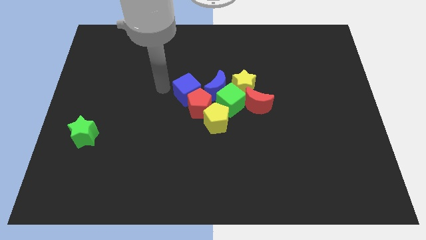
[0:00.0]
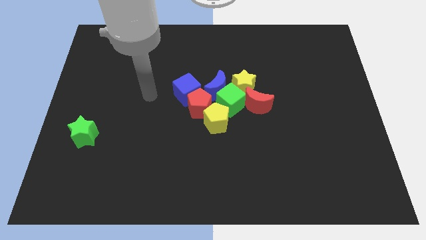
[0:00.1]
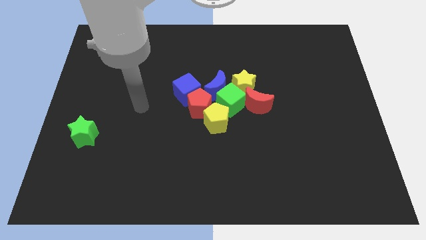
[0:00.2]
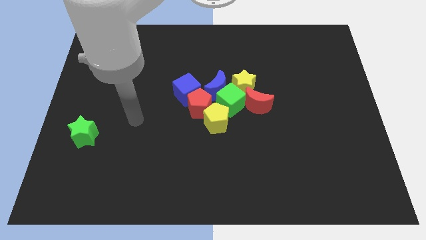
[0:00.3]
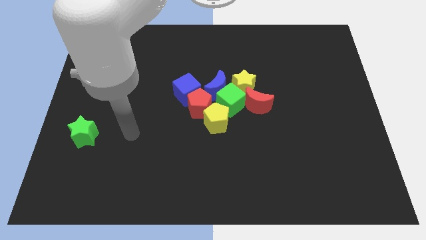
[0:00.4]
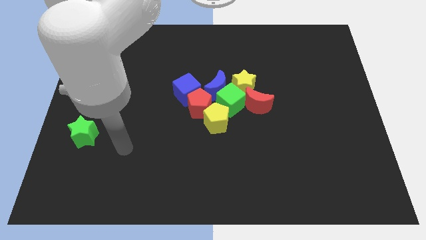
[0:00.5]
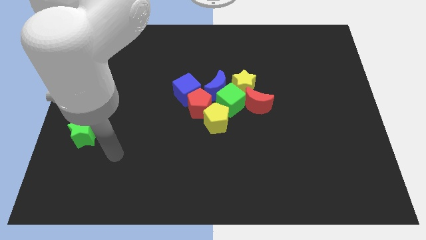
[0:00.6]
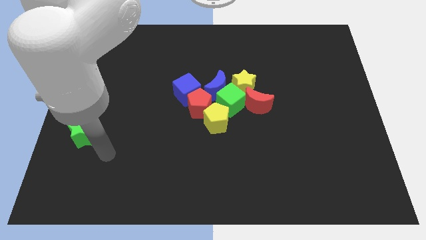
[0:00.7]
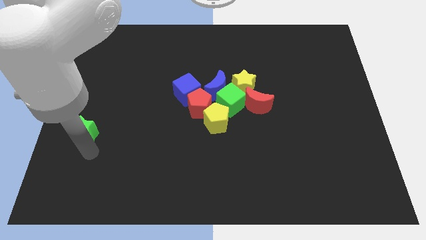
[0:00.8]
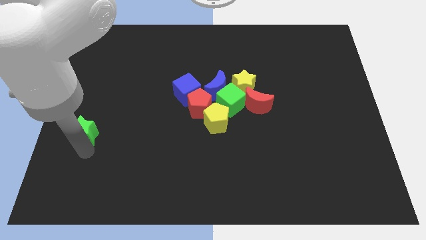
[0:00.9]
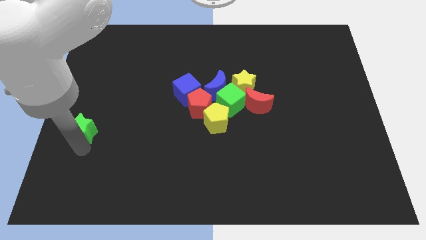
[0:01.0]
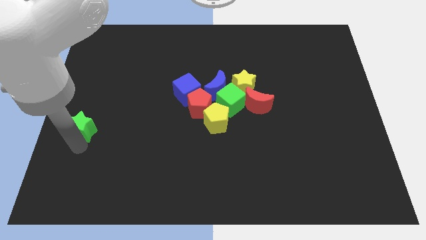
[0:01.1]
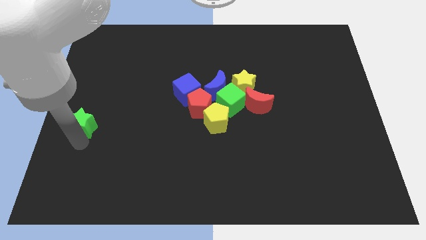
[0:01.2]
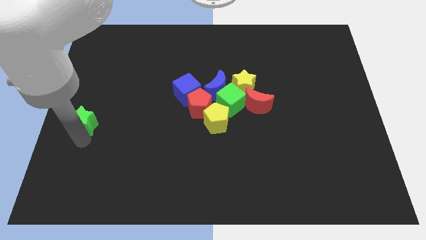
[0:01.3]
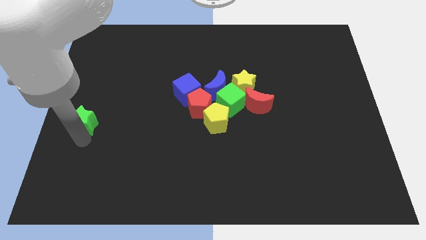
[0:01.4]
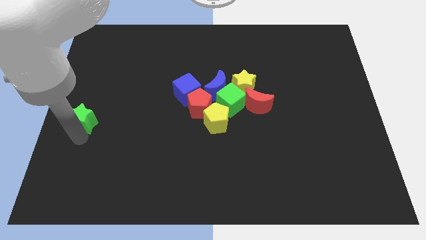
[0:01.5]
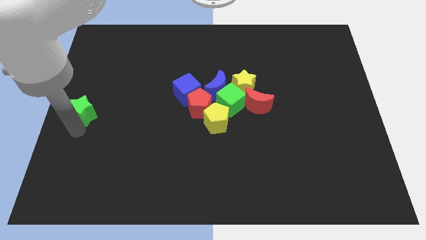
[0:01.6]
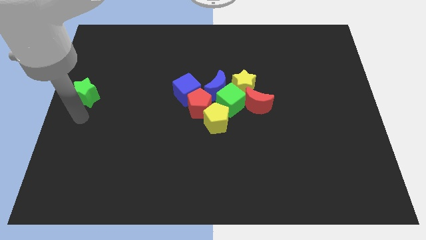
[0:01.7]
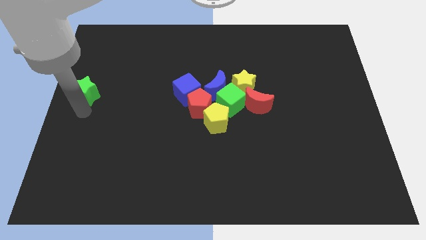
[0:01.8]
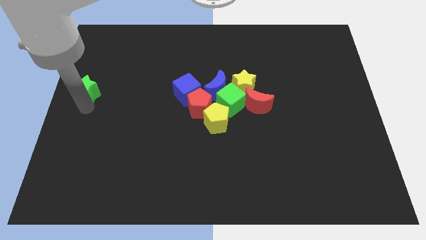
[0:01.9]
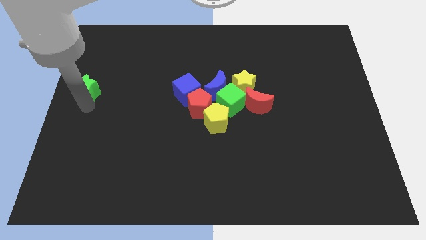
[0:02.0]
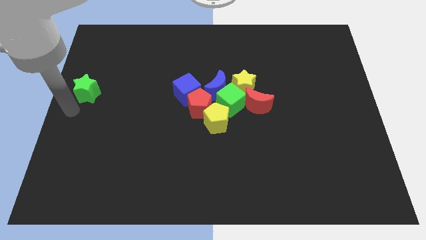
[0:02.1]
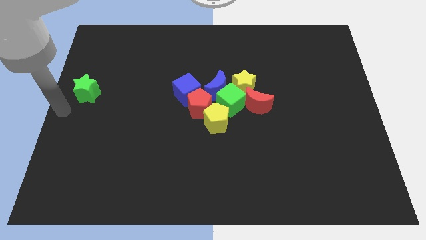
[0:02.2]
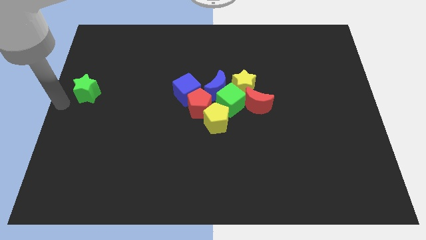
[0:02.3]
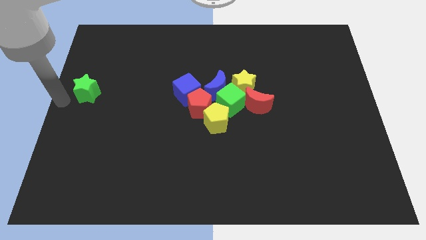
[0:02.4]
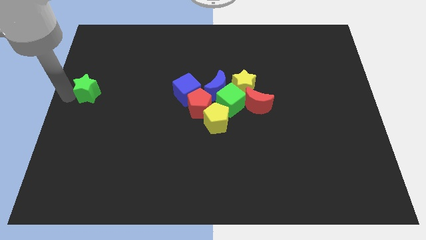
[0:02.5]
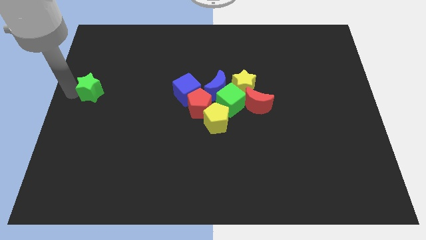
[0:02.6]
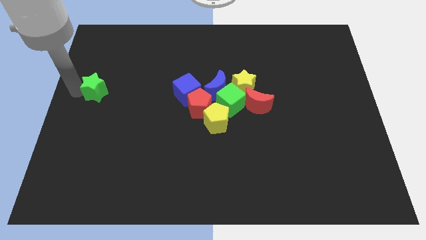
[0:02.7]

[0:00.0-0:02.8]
push the green star upward

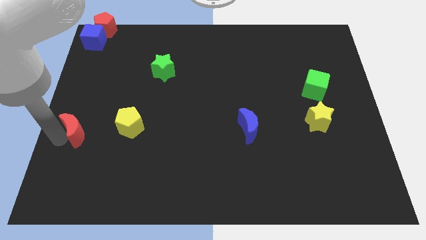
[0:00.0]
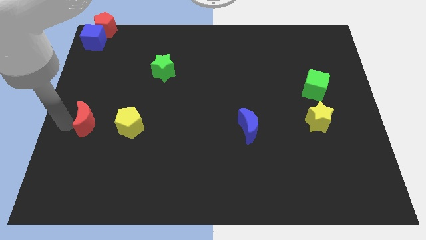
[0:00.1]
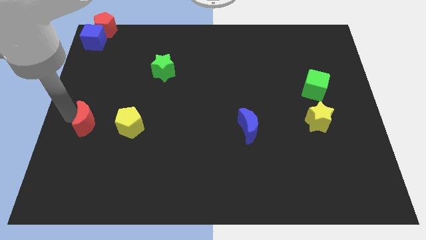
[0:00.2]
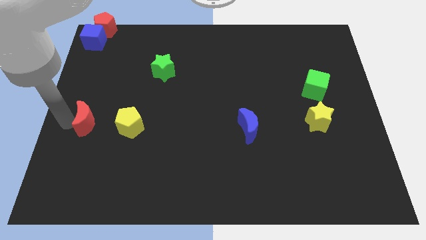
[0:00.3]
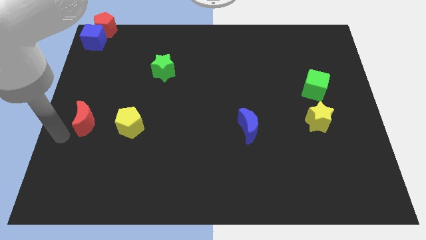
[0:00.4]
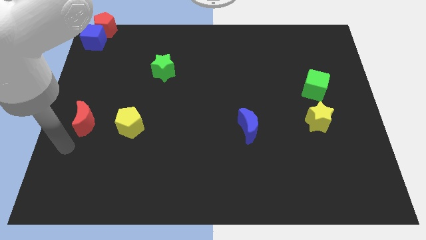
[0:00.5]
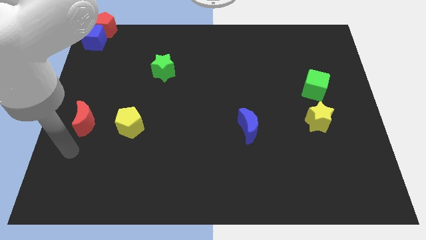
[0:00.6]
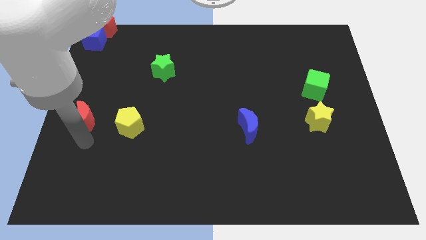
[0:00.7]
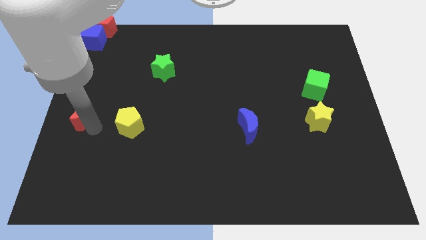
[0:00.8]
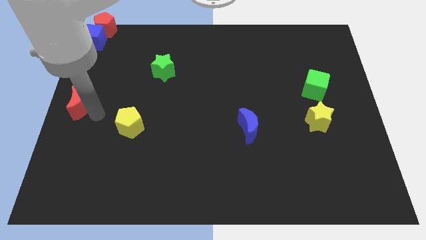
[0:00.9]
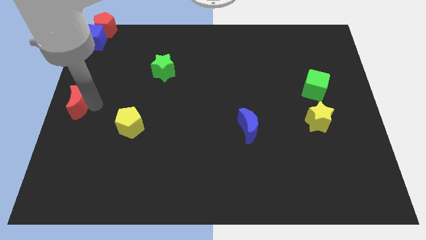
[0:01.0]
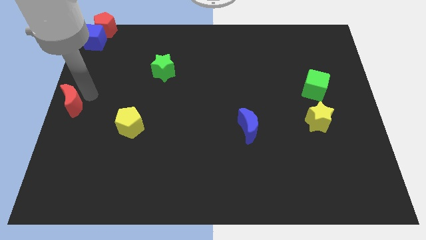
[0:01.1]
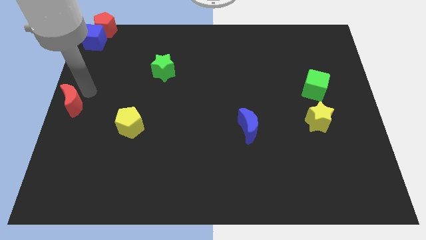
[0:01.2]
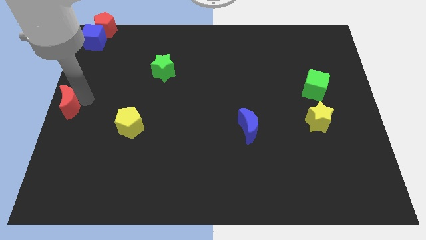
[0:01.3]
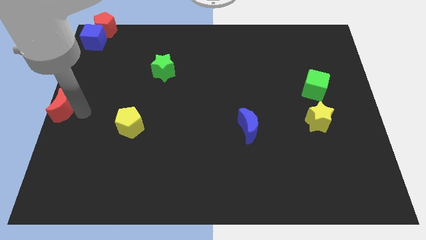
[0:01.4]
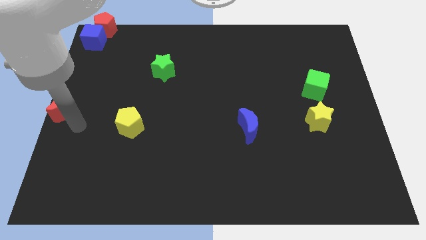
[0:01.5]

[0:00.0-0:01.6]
move the red moon to the center left of the board

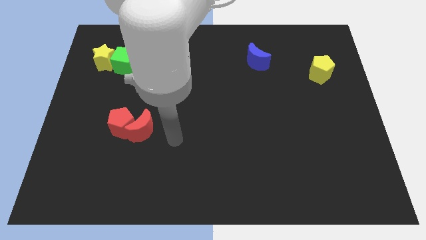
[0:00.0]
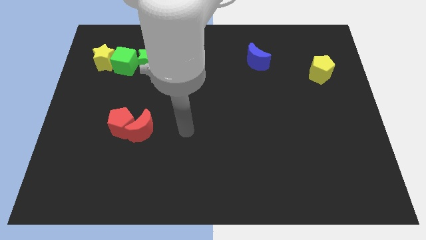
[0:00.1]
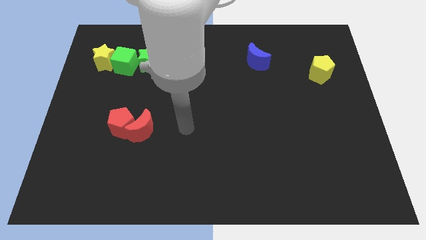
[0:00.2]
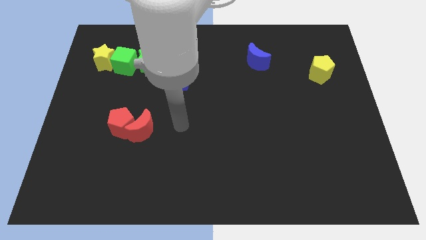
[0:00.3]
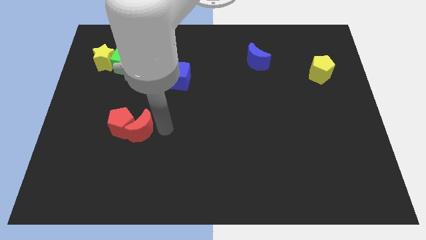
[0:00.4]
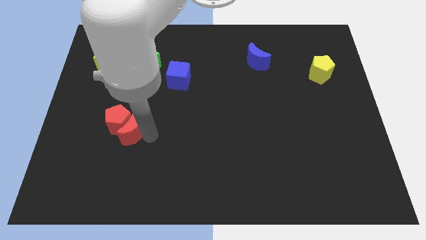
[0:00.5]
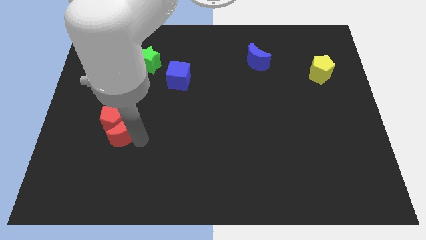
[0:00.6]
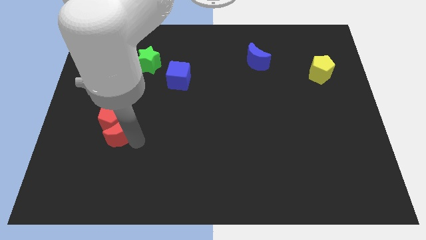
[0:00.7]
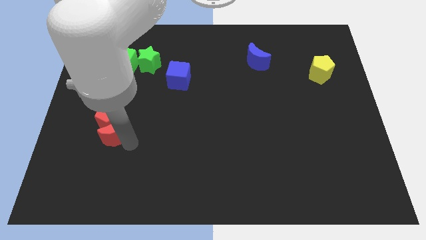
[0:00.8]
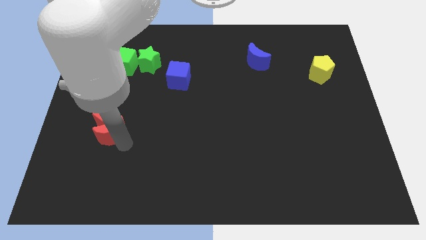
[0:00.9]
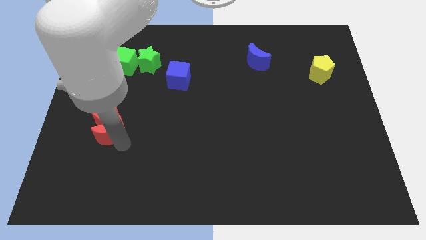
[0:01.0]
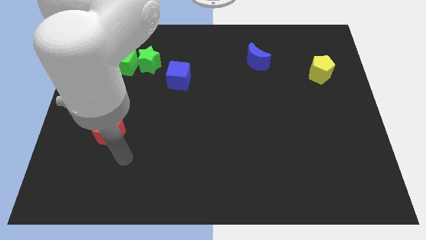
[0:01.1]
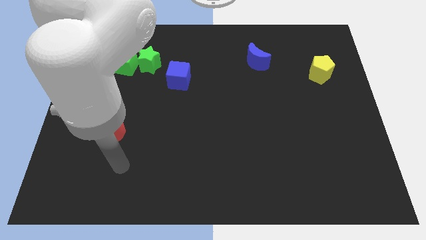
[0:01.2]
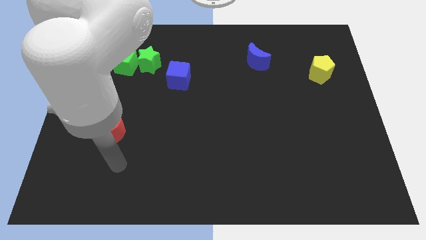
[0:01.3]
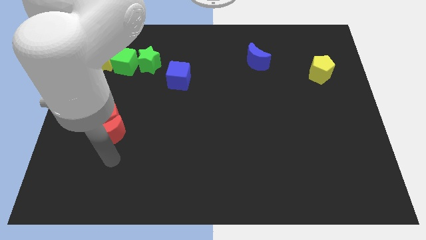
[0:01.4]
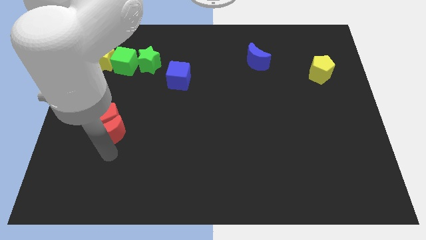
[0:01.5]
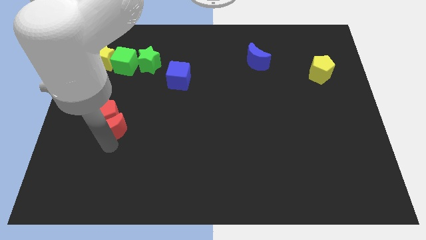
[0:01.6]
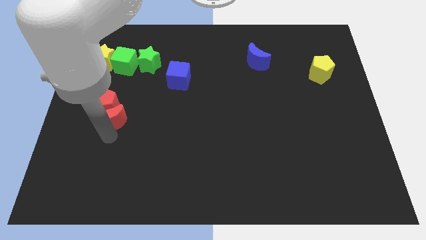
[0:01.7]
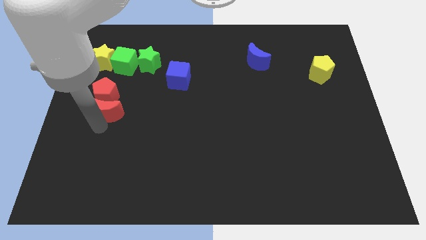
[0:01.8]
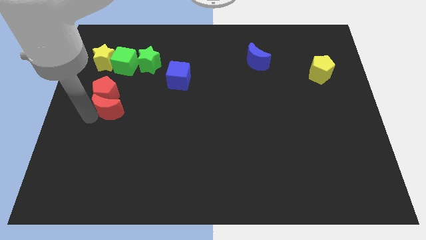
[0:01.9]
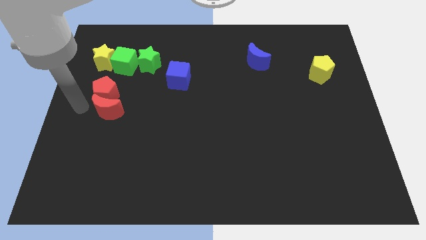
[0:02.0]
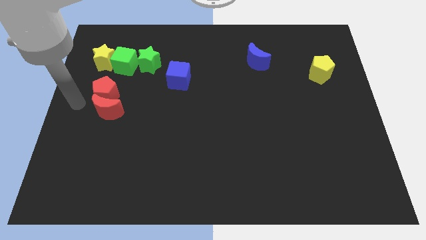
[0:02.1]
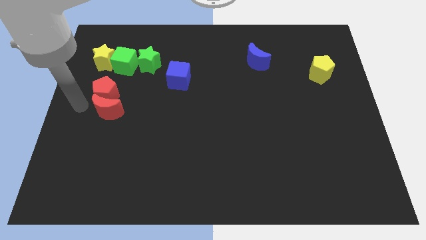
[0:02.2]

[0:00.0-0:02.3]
push the red pentagon with the red moon to the bottom of the green cube

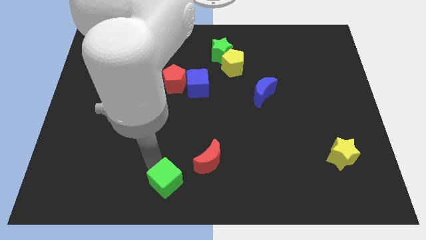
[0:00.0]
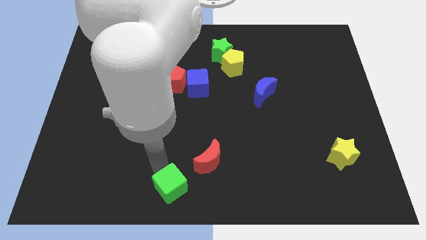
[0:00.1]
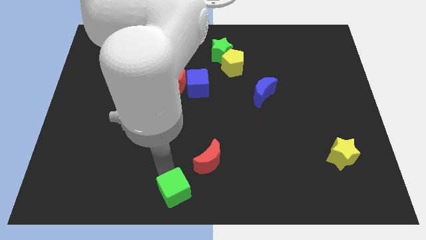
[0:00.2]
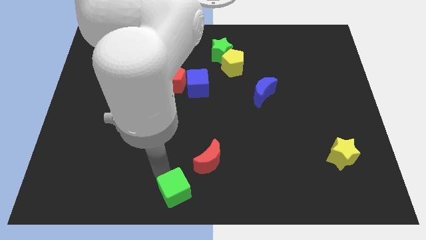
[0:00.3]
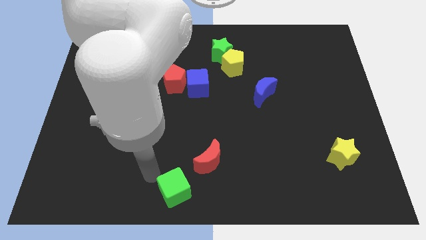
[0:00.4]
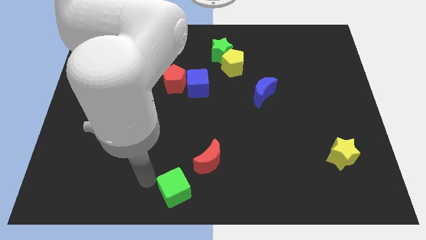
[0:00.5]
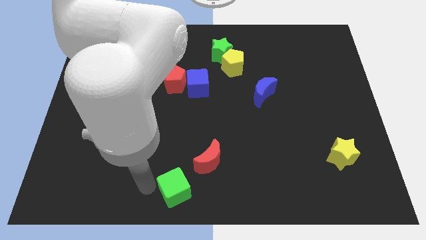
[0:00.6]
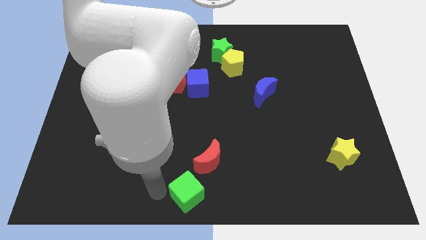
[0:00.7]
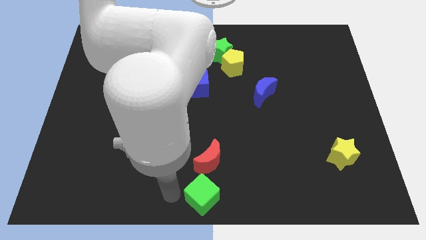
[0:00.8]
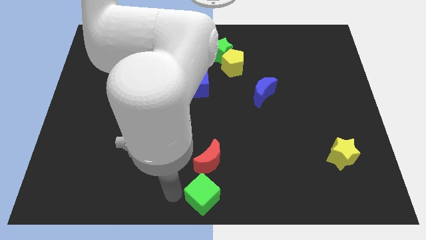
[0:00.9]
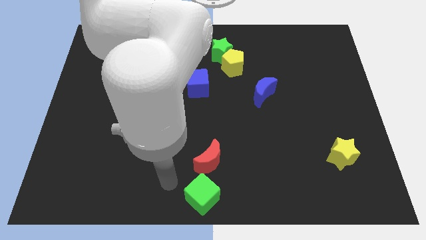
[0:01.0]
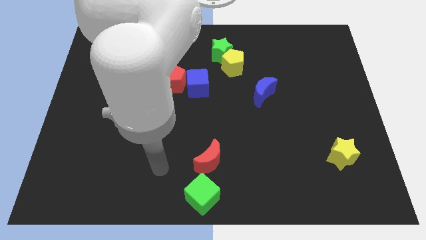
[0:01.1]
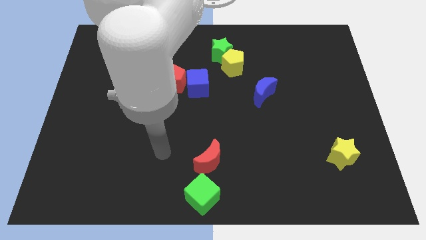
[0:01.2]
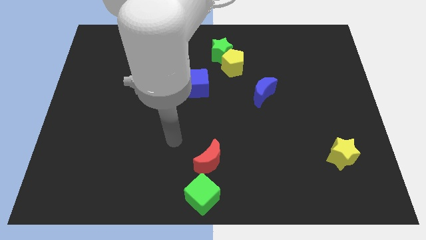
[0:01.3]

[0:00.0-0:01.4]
move the green cube at the bottom center of the board

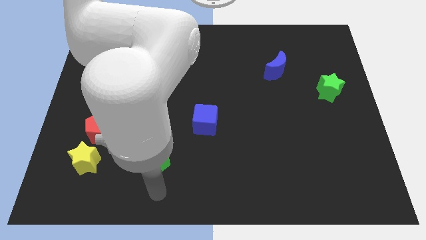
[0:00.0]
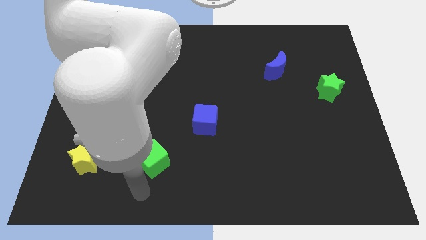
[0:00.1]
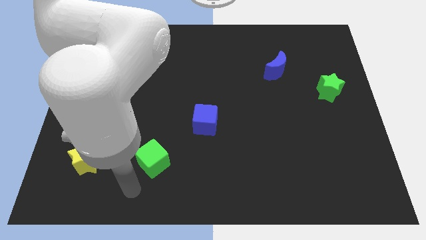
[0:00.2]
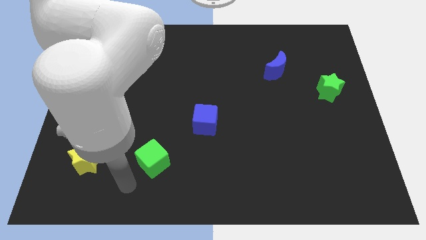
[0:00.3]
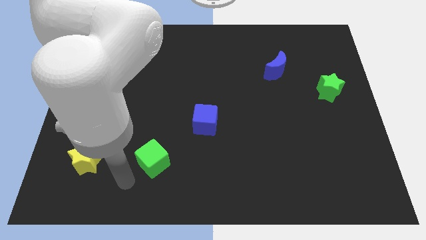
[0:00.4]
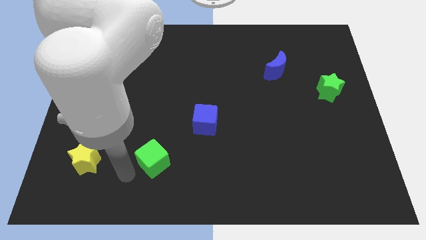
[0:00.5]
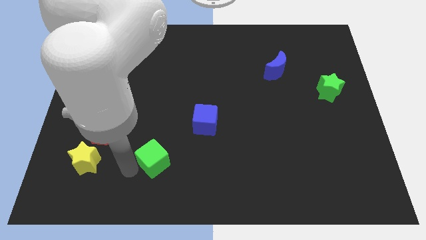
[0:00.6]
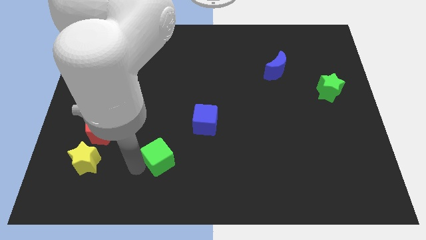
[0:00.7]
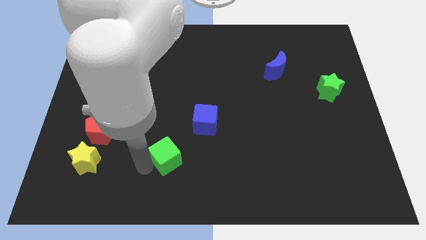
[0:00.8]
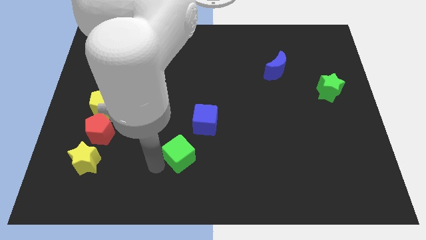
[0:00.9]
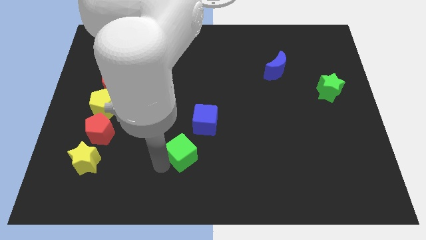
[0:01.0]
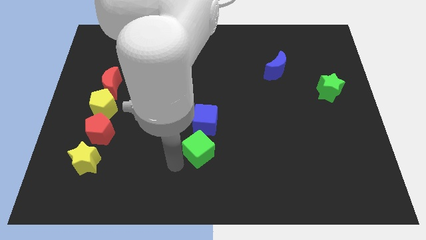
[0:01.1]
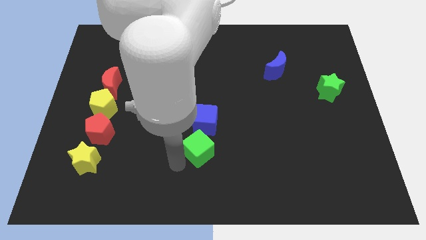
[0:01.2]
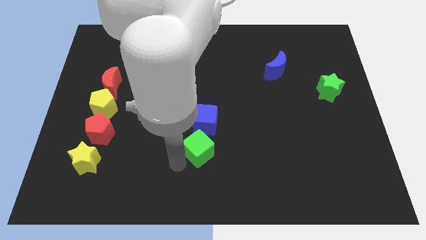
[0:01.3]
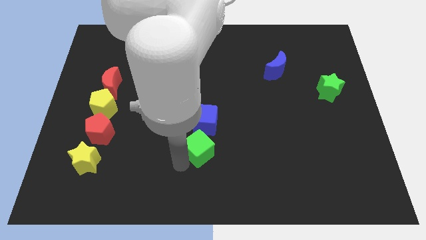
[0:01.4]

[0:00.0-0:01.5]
slide the green cube below the blue cube
